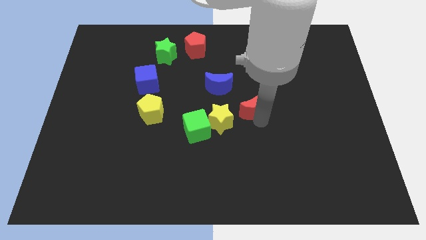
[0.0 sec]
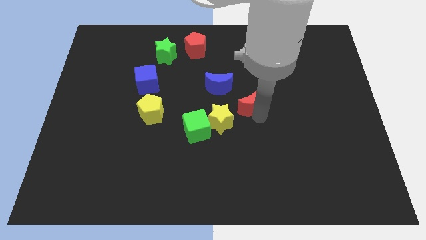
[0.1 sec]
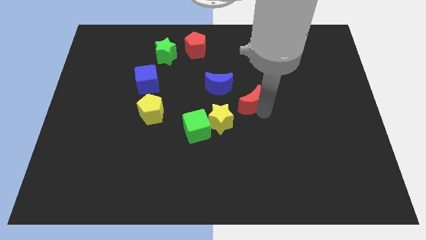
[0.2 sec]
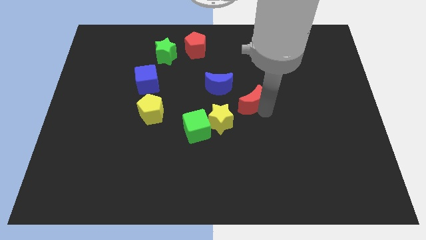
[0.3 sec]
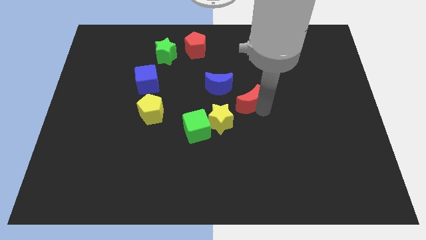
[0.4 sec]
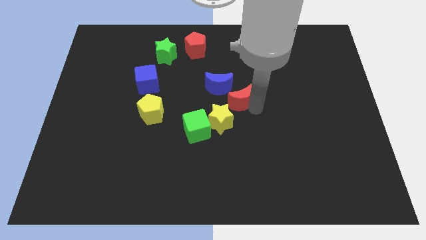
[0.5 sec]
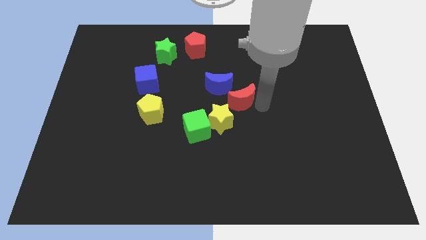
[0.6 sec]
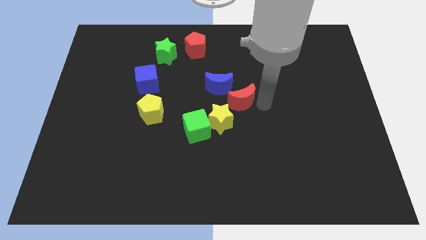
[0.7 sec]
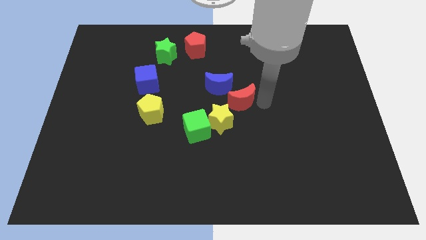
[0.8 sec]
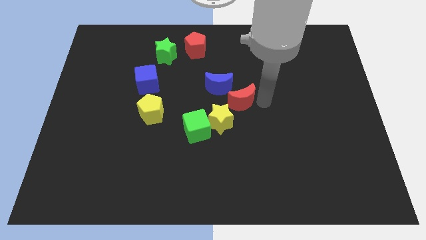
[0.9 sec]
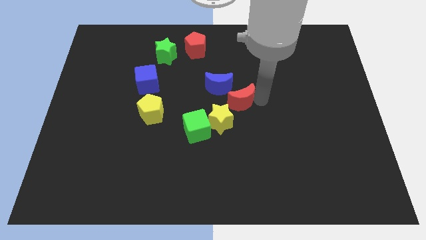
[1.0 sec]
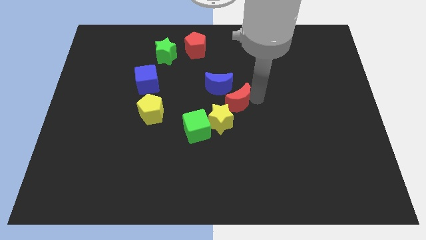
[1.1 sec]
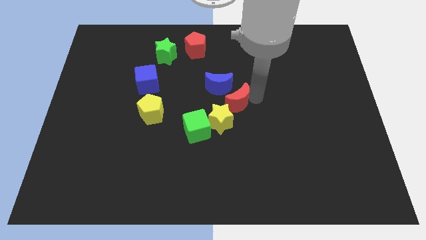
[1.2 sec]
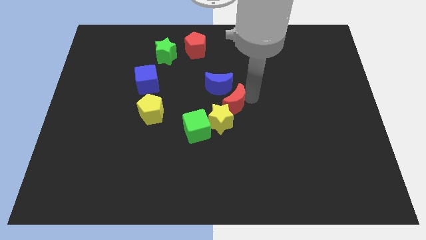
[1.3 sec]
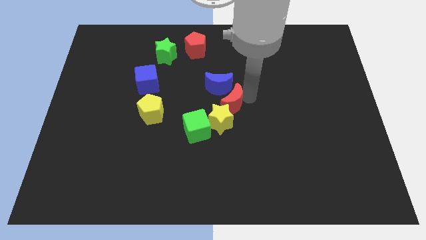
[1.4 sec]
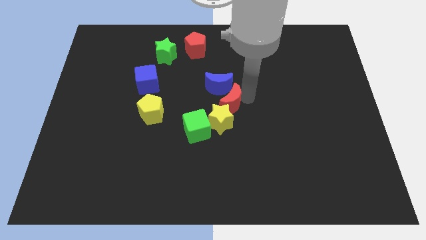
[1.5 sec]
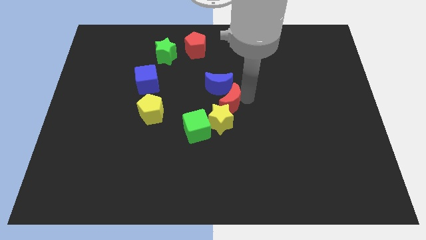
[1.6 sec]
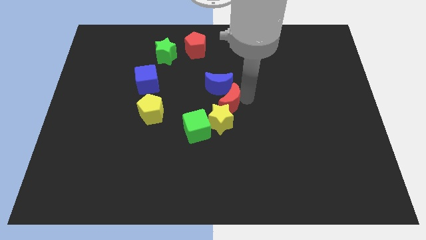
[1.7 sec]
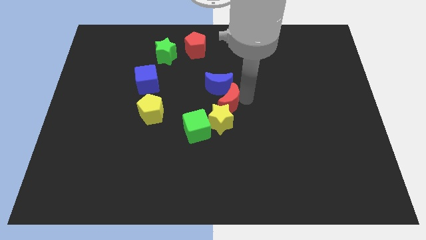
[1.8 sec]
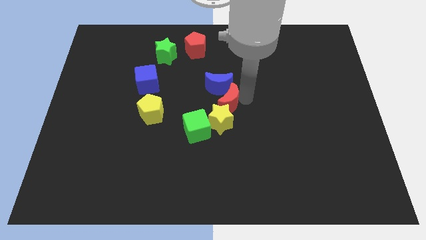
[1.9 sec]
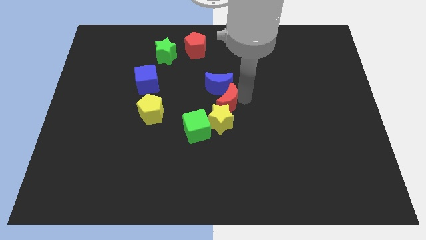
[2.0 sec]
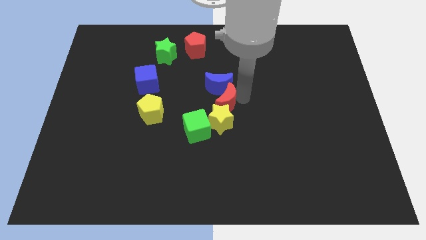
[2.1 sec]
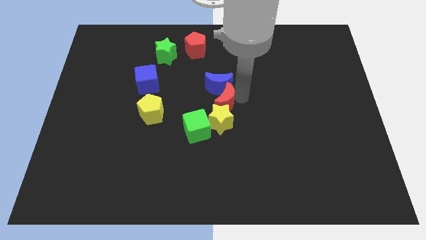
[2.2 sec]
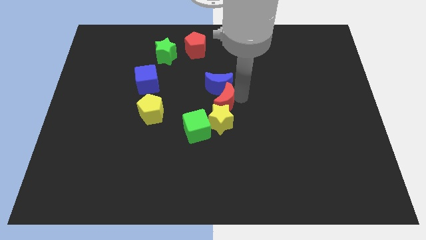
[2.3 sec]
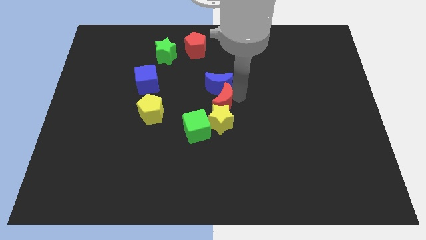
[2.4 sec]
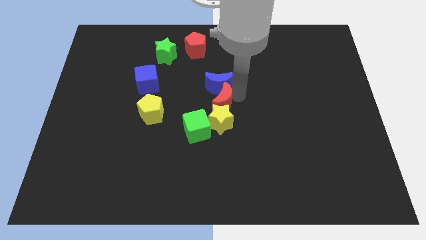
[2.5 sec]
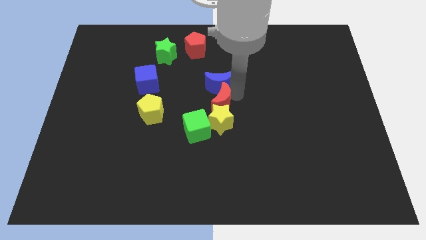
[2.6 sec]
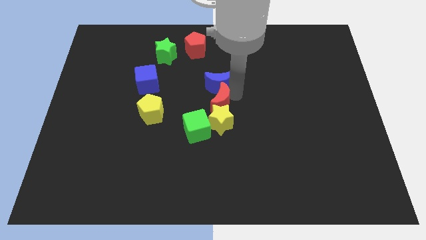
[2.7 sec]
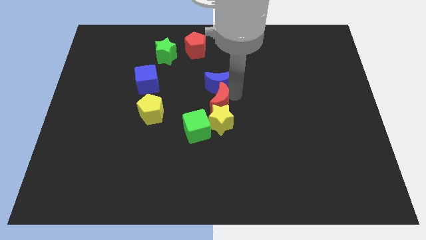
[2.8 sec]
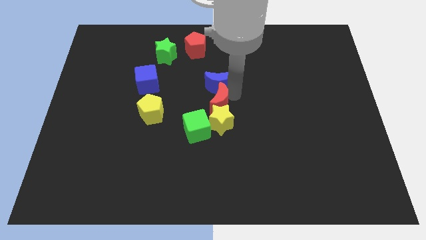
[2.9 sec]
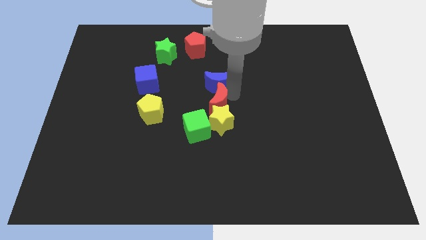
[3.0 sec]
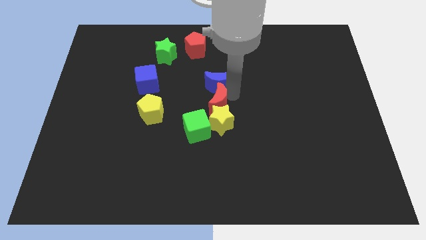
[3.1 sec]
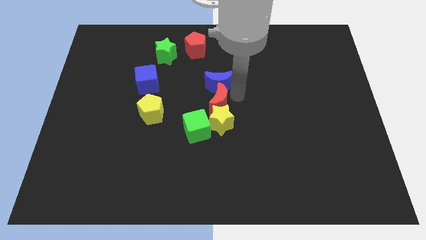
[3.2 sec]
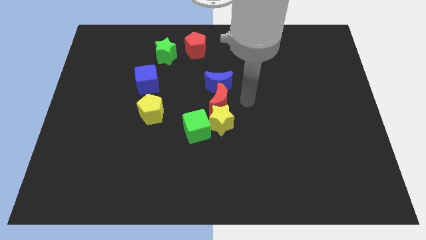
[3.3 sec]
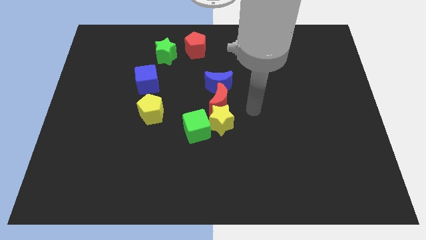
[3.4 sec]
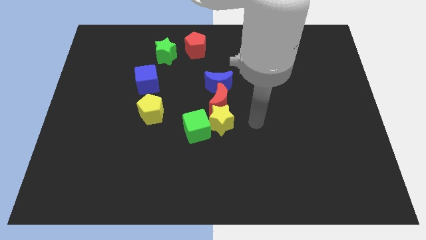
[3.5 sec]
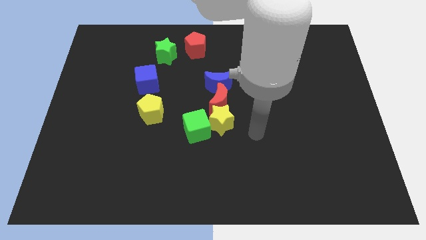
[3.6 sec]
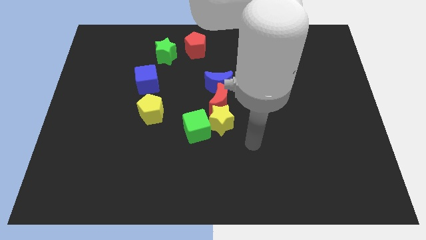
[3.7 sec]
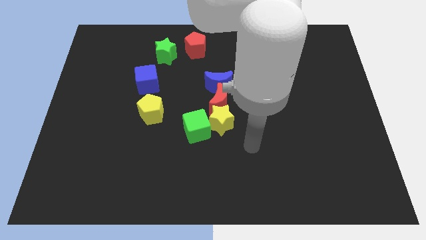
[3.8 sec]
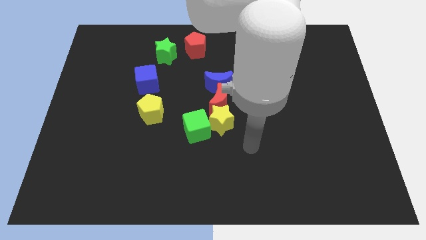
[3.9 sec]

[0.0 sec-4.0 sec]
move red crescent in between blue crescent and yellow star

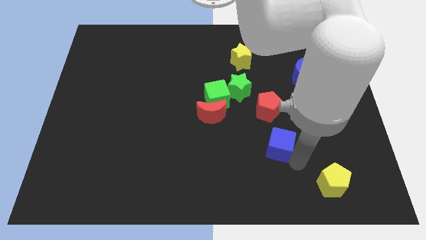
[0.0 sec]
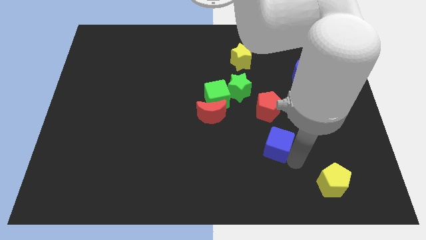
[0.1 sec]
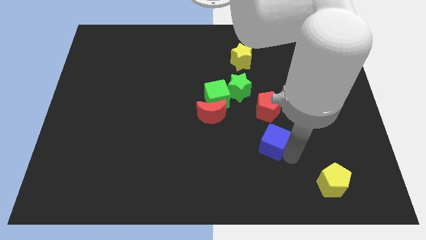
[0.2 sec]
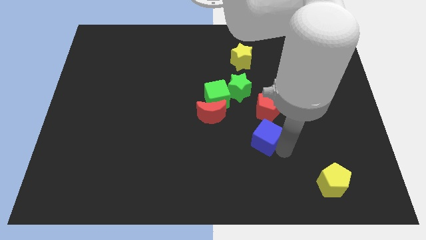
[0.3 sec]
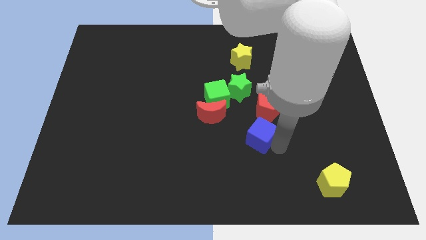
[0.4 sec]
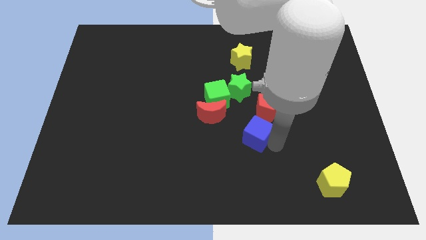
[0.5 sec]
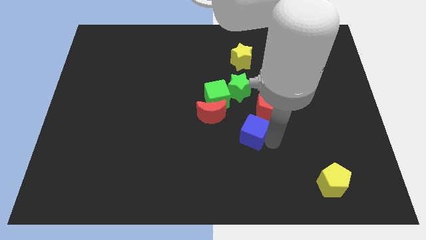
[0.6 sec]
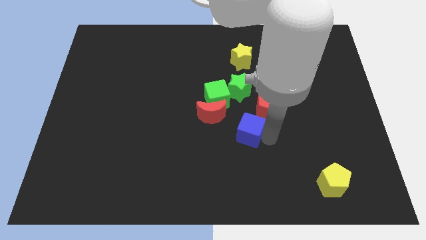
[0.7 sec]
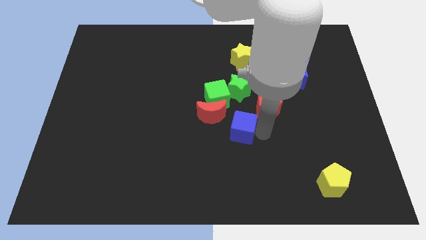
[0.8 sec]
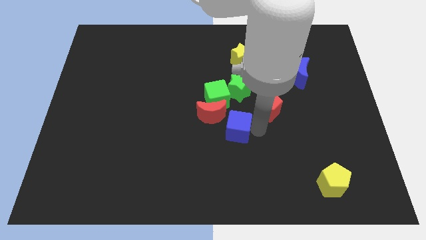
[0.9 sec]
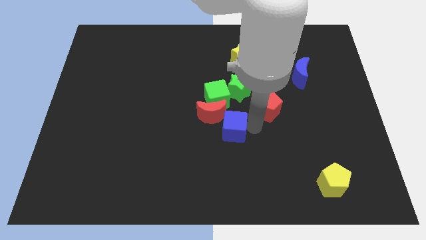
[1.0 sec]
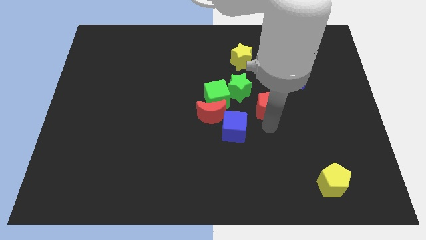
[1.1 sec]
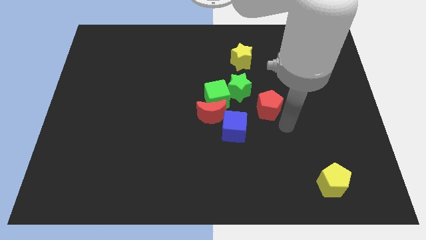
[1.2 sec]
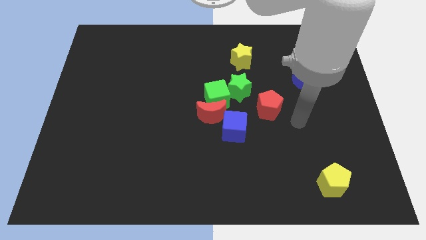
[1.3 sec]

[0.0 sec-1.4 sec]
put the blue cube close to the red moon

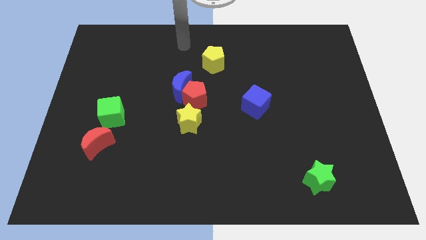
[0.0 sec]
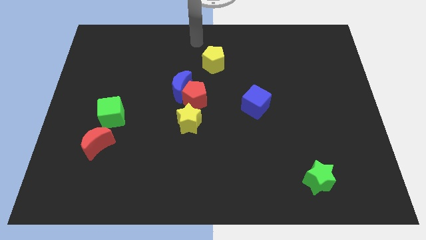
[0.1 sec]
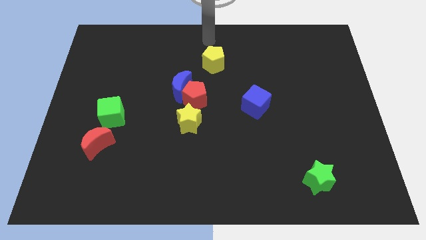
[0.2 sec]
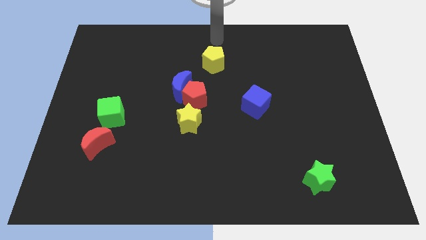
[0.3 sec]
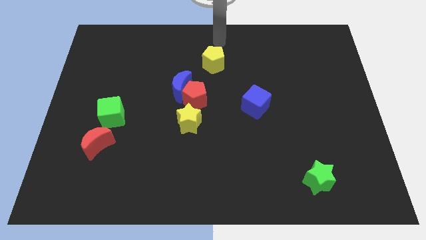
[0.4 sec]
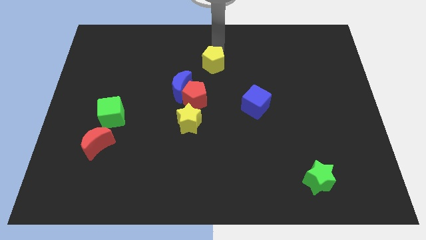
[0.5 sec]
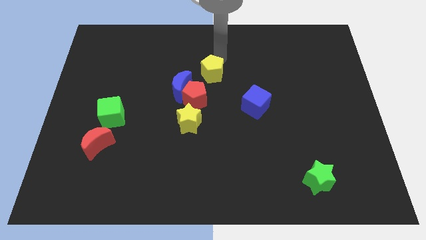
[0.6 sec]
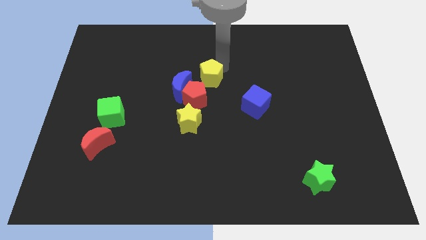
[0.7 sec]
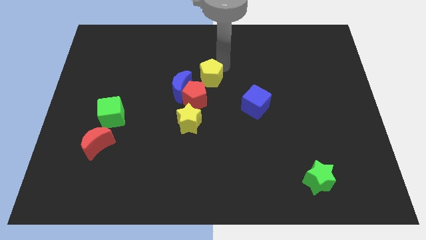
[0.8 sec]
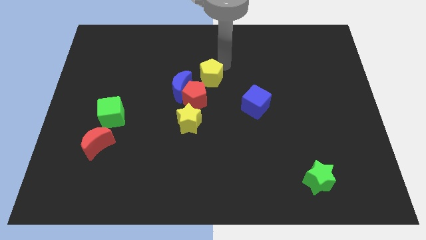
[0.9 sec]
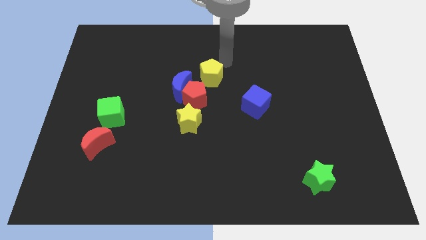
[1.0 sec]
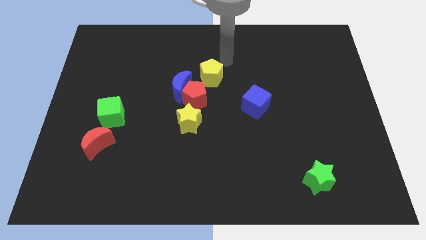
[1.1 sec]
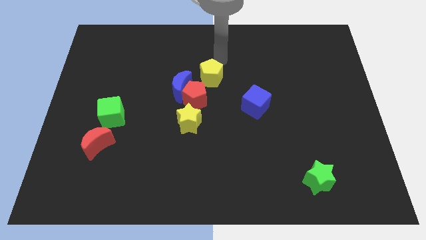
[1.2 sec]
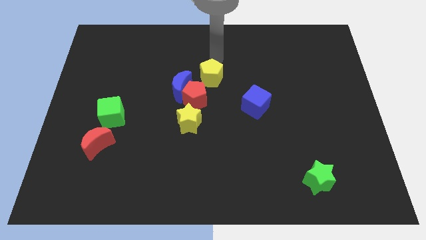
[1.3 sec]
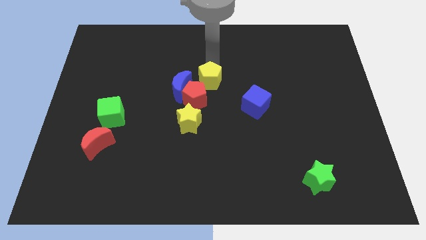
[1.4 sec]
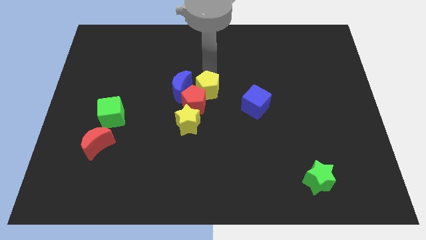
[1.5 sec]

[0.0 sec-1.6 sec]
push the yellow pentagon into red pentagon

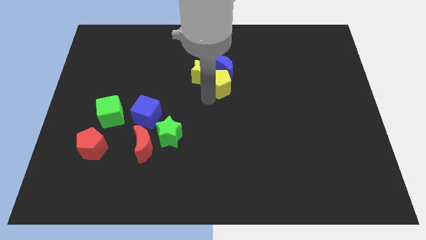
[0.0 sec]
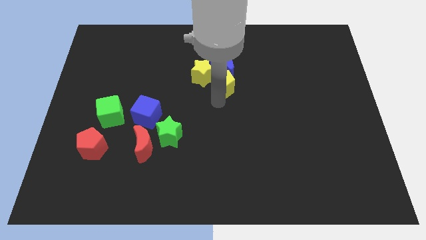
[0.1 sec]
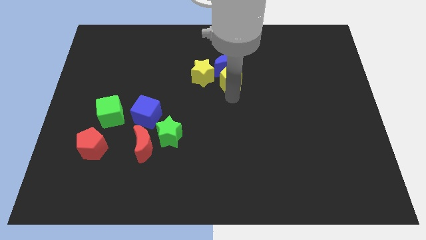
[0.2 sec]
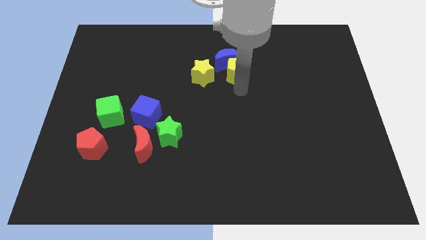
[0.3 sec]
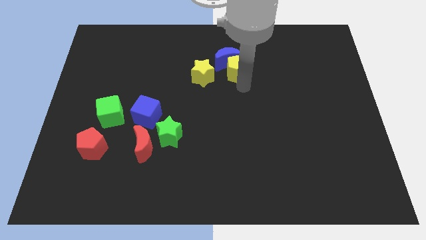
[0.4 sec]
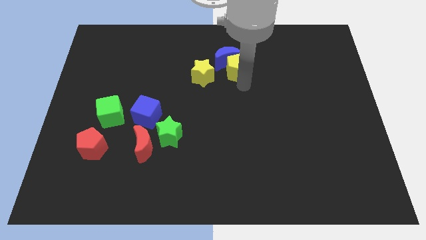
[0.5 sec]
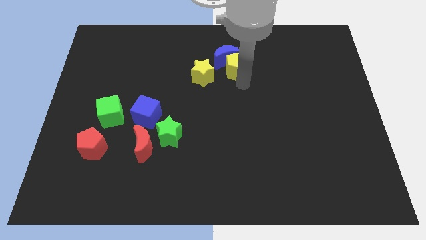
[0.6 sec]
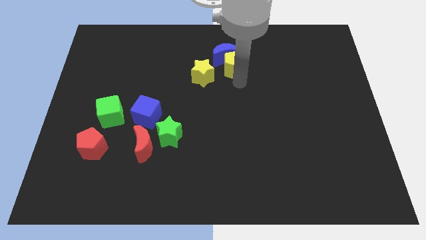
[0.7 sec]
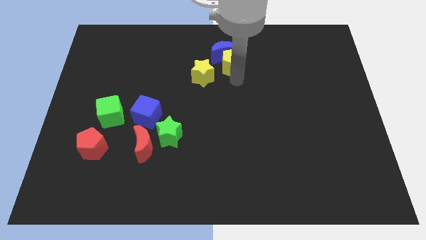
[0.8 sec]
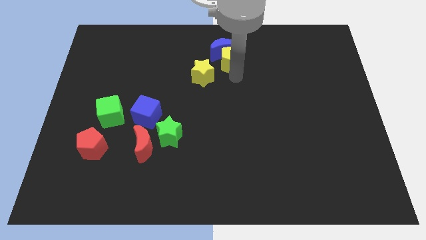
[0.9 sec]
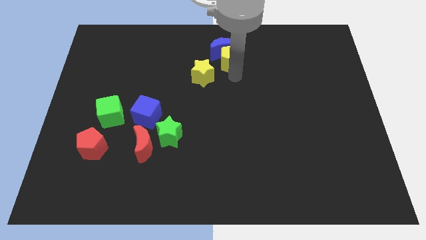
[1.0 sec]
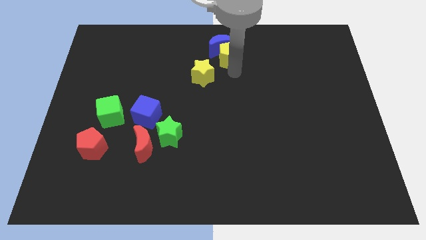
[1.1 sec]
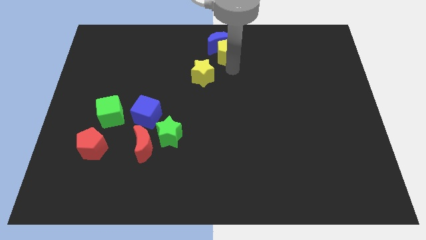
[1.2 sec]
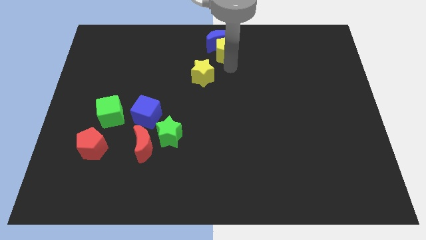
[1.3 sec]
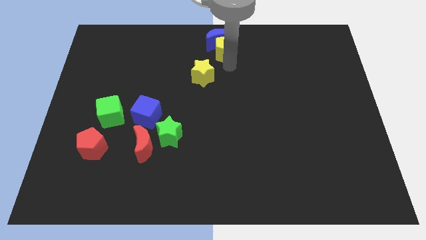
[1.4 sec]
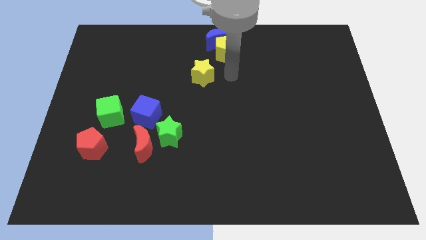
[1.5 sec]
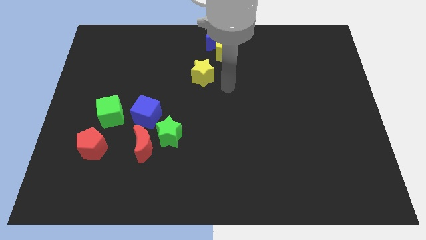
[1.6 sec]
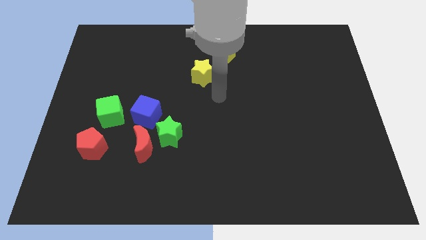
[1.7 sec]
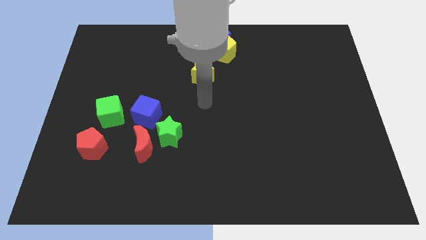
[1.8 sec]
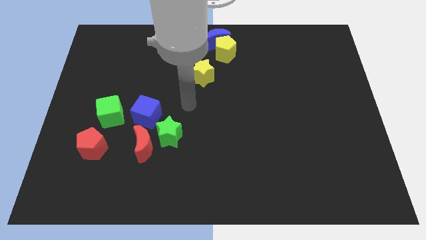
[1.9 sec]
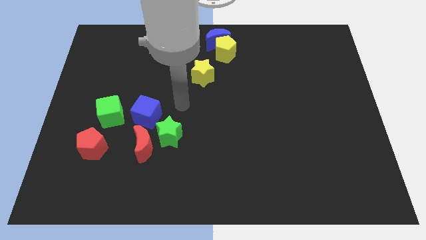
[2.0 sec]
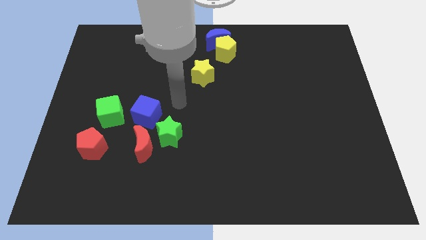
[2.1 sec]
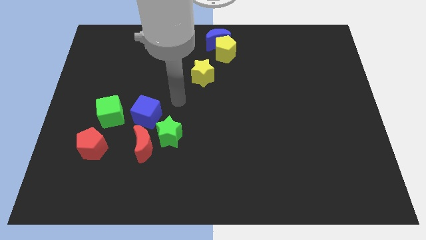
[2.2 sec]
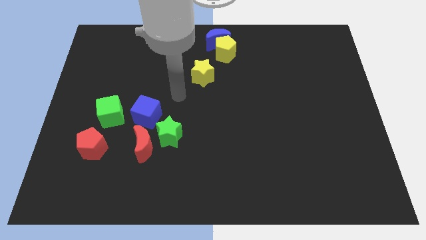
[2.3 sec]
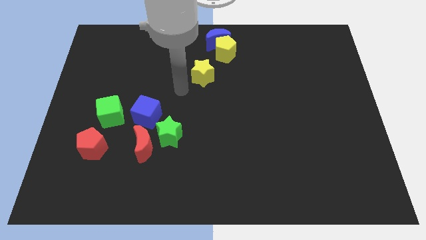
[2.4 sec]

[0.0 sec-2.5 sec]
move yellow pentagon towards top center of the board
